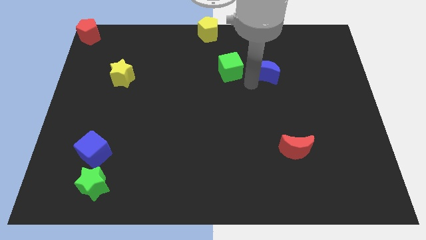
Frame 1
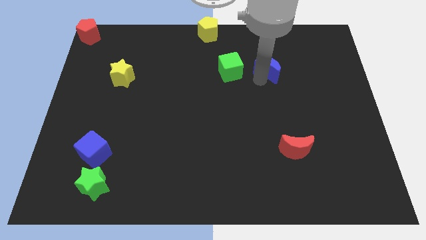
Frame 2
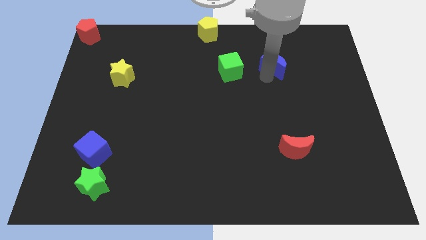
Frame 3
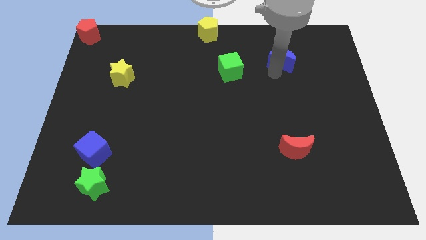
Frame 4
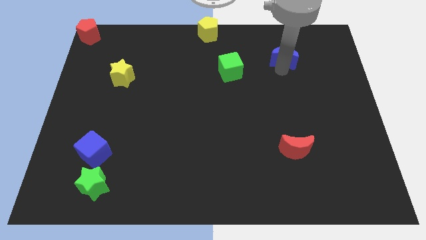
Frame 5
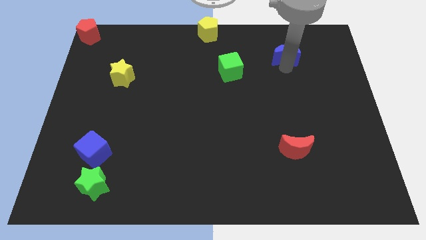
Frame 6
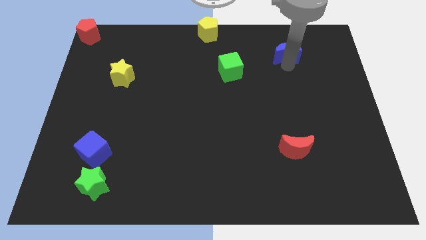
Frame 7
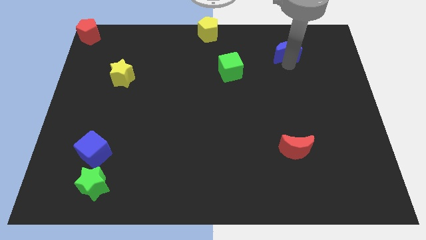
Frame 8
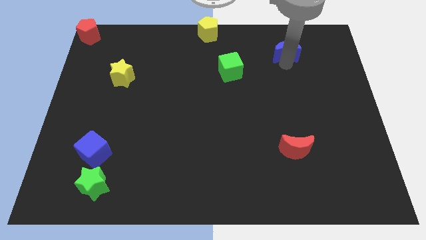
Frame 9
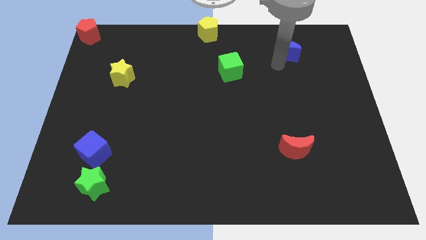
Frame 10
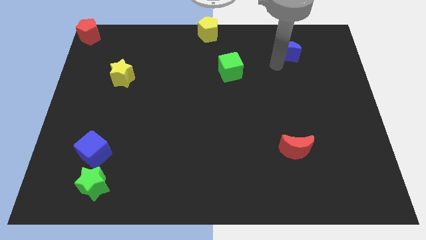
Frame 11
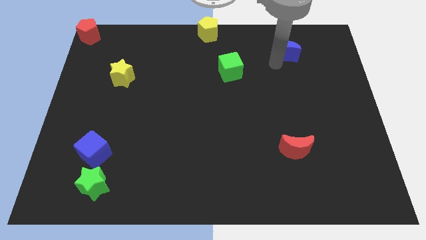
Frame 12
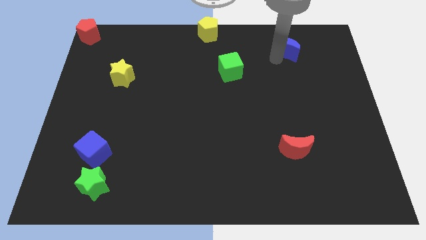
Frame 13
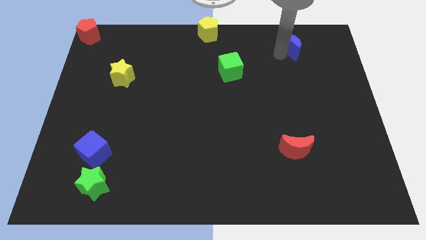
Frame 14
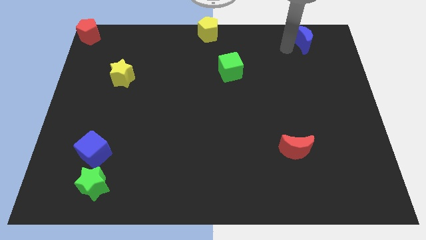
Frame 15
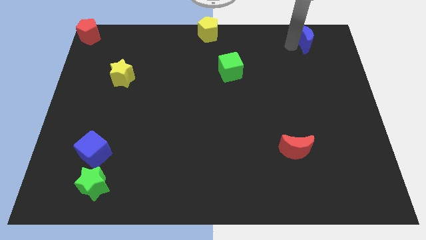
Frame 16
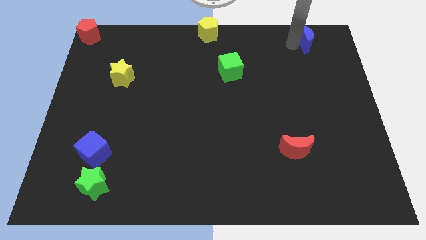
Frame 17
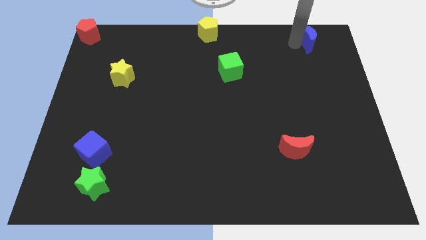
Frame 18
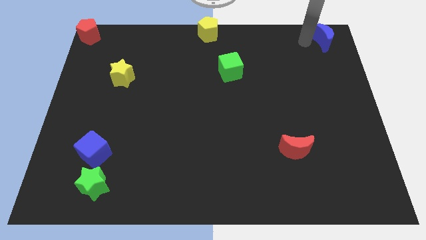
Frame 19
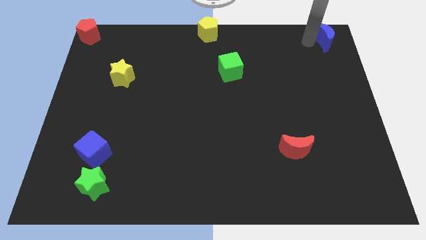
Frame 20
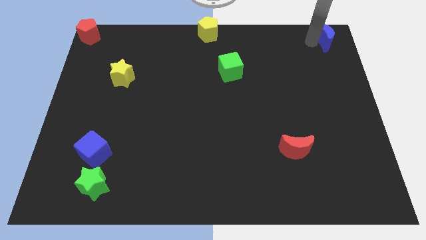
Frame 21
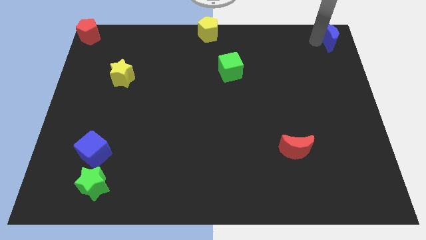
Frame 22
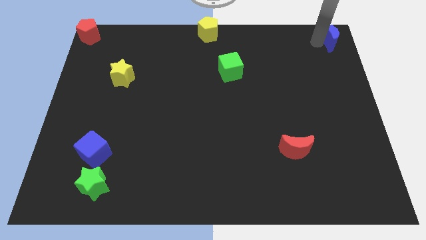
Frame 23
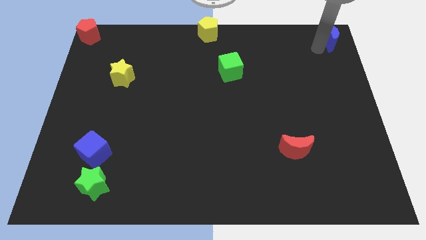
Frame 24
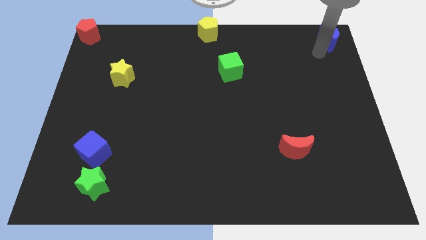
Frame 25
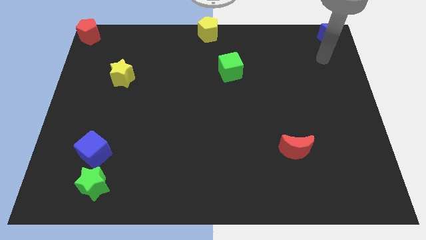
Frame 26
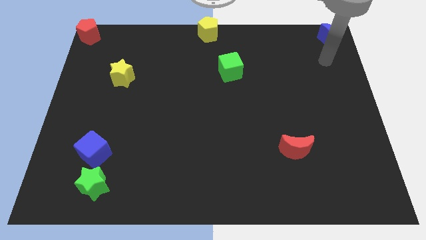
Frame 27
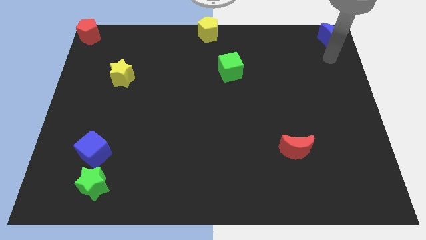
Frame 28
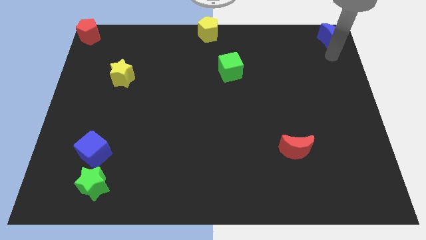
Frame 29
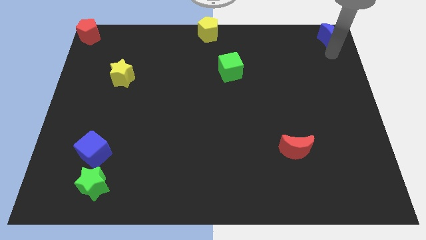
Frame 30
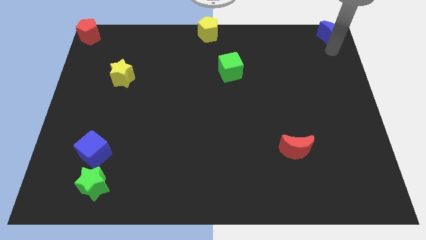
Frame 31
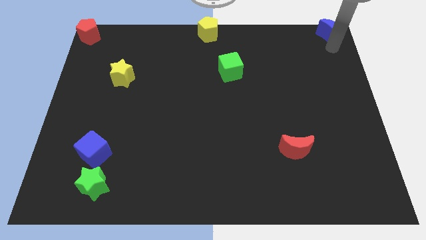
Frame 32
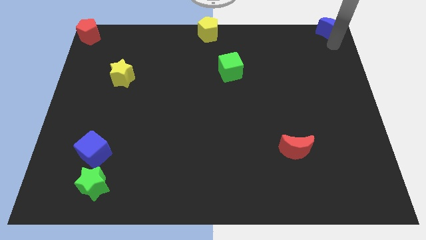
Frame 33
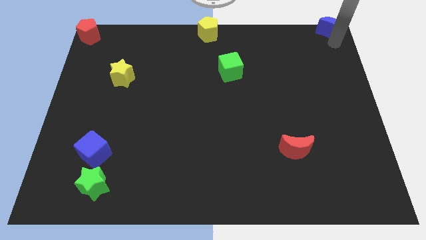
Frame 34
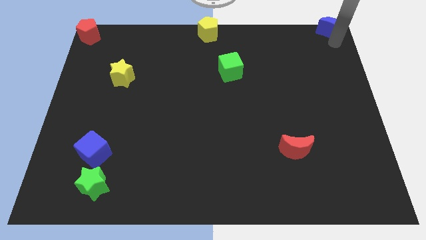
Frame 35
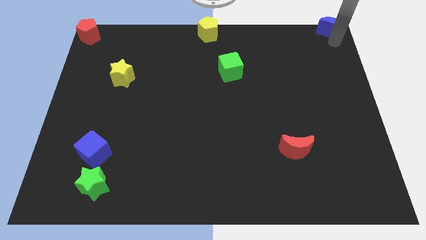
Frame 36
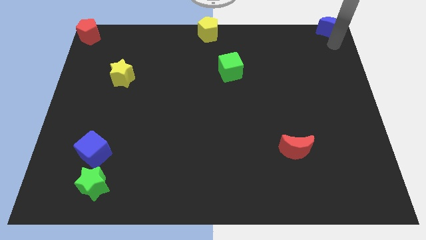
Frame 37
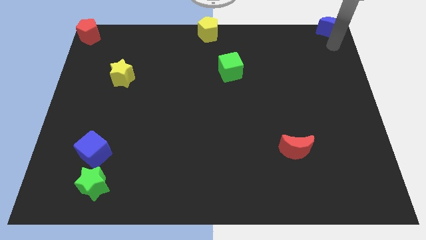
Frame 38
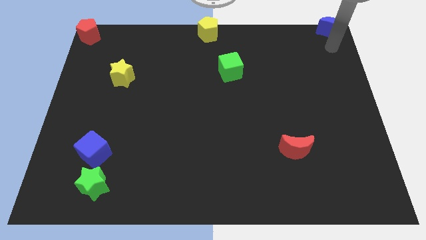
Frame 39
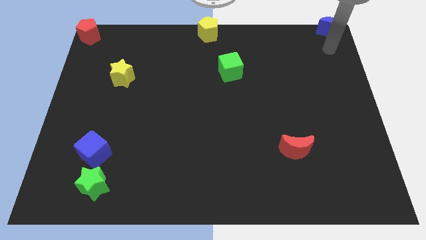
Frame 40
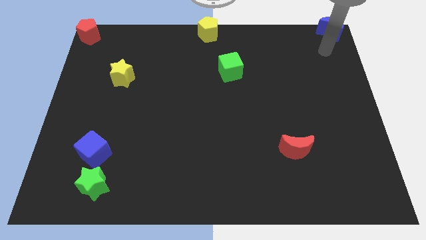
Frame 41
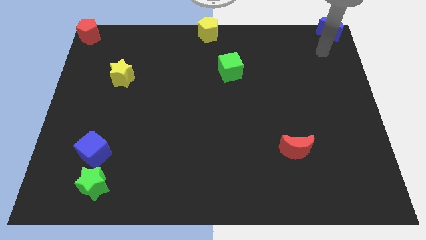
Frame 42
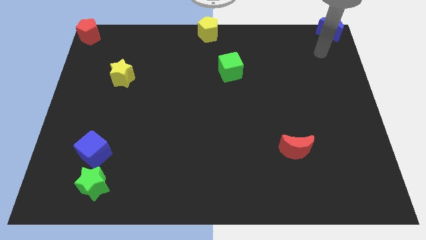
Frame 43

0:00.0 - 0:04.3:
put the blue moon to the top right corner of the board

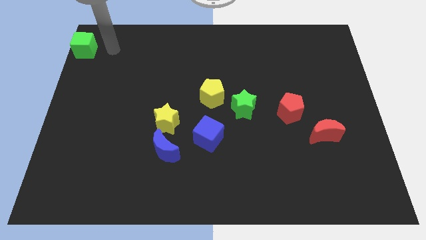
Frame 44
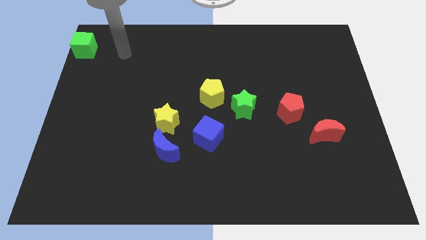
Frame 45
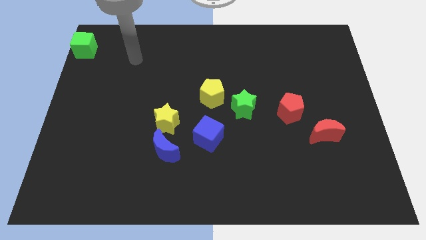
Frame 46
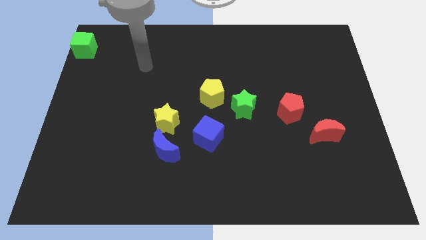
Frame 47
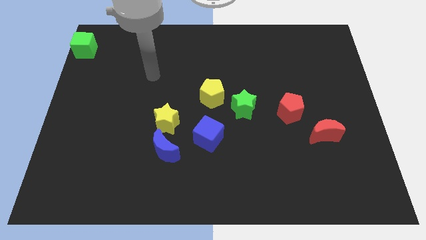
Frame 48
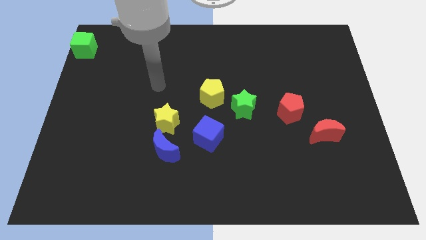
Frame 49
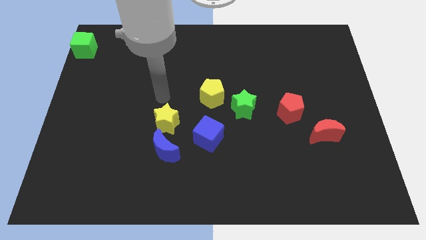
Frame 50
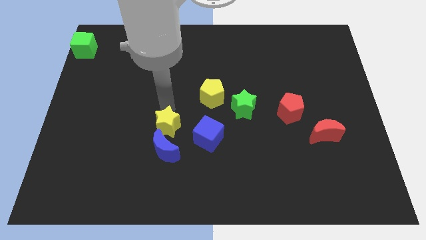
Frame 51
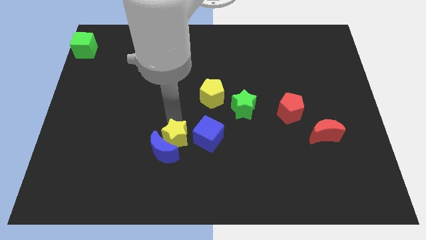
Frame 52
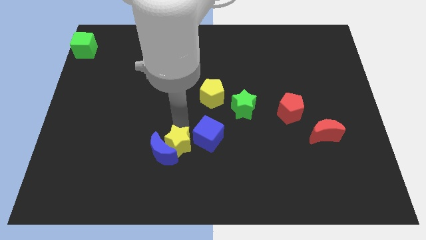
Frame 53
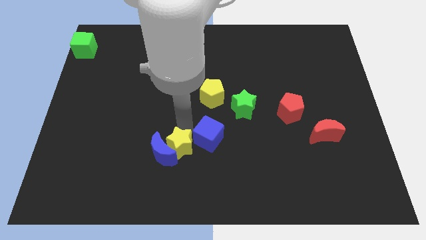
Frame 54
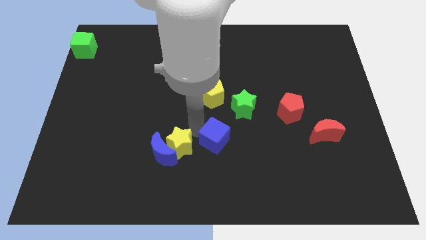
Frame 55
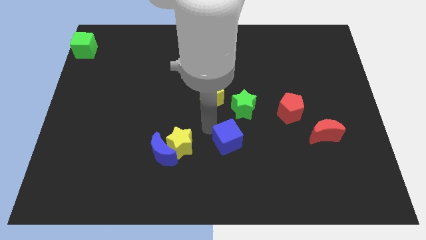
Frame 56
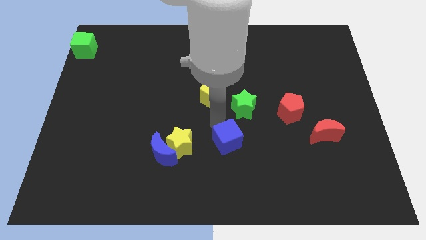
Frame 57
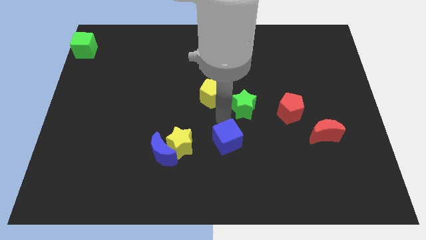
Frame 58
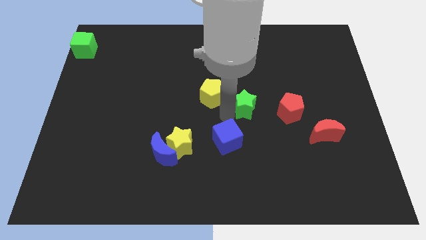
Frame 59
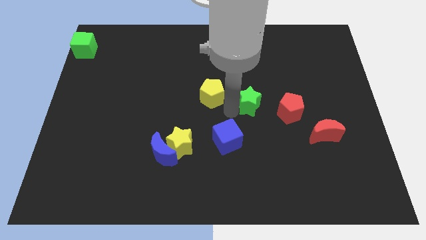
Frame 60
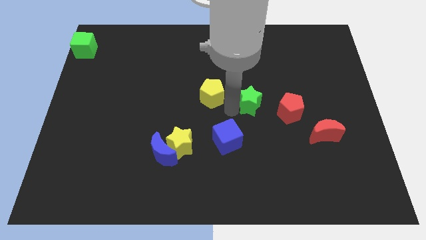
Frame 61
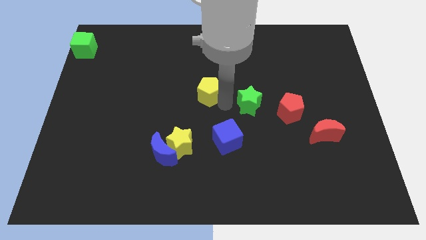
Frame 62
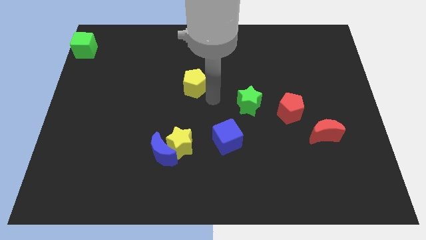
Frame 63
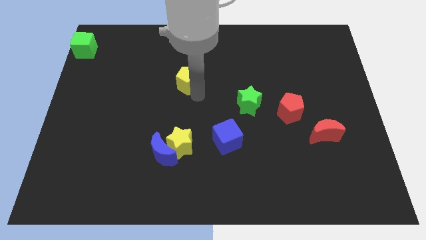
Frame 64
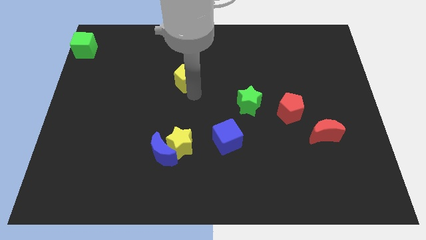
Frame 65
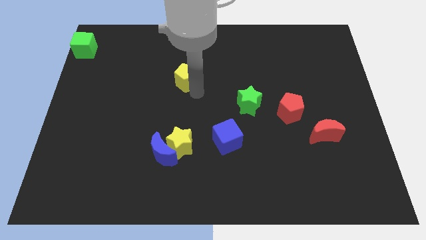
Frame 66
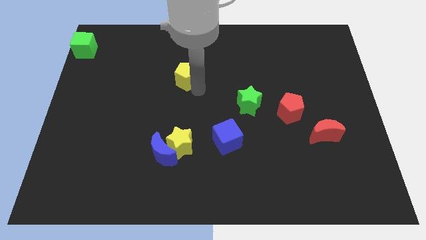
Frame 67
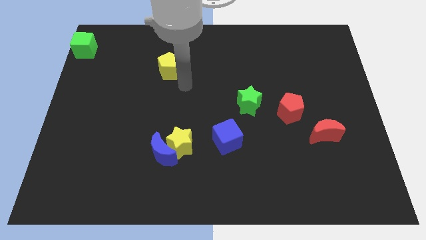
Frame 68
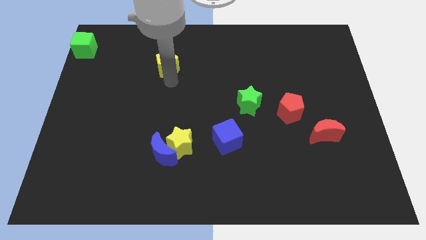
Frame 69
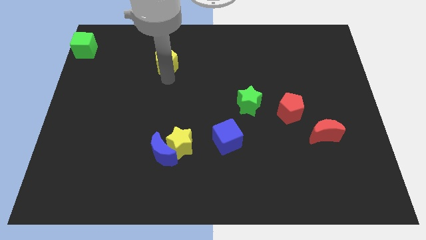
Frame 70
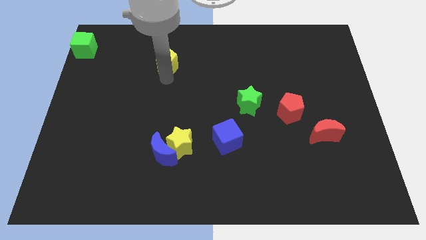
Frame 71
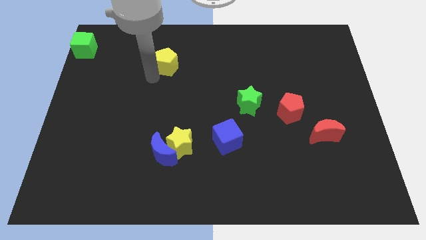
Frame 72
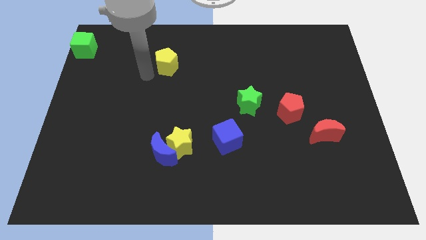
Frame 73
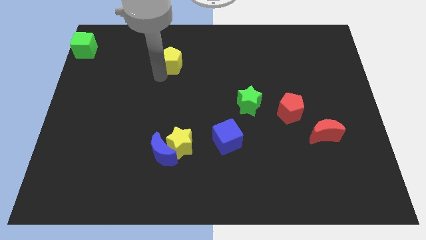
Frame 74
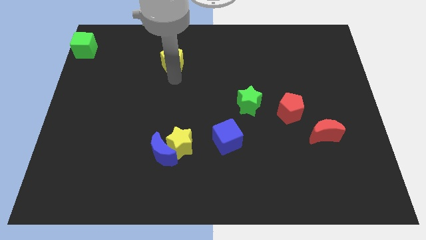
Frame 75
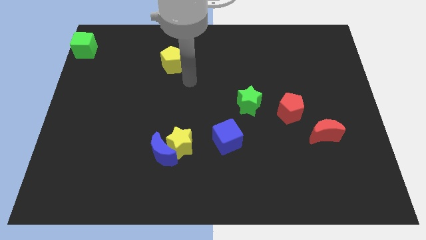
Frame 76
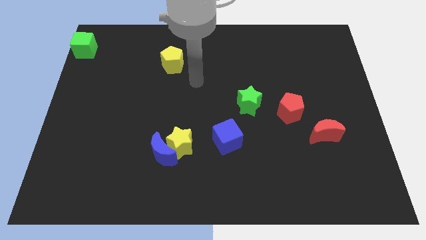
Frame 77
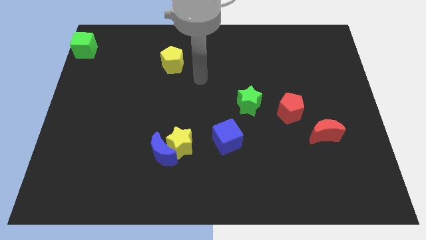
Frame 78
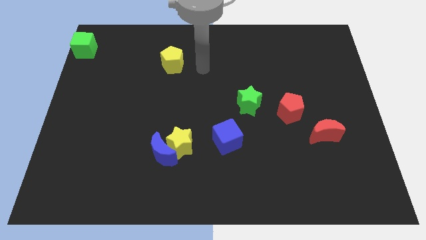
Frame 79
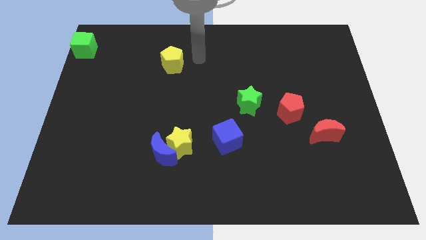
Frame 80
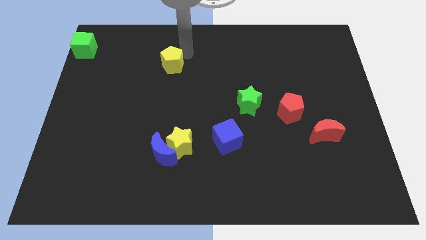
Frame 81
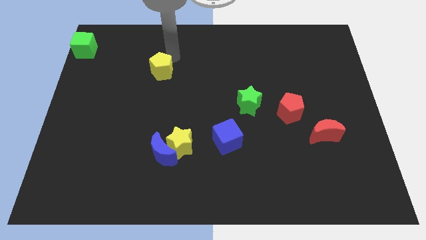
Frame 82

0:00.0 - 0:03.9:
push the yellow pentagon towards top

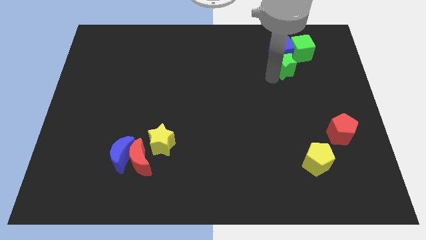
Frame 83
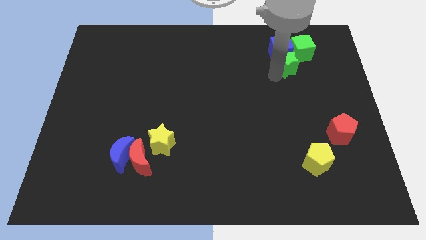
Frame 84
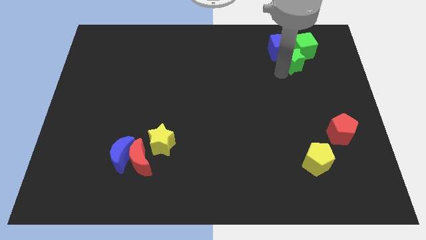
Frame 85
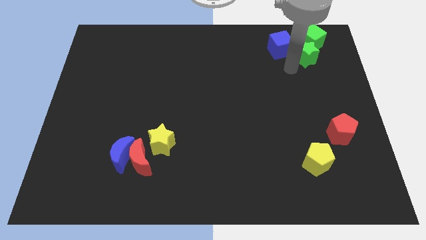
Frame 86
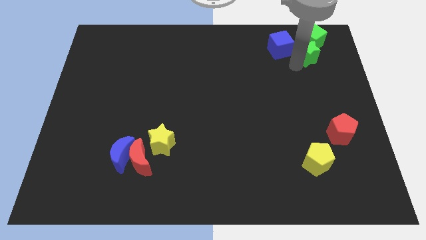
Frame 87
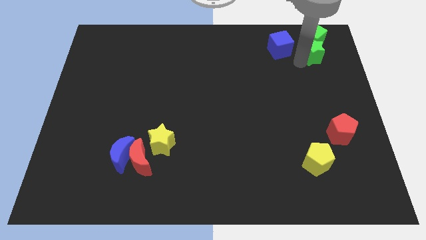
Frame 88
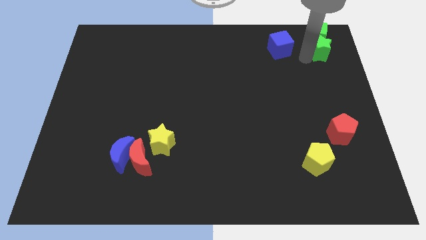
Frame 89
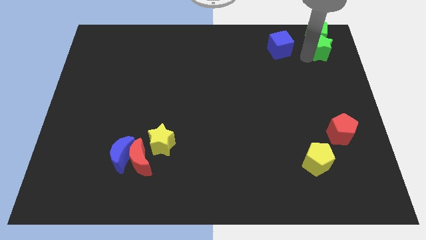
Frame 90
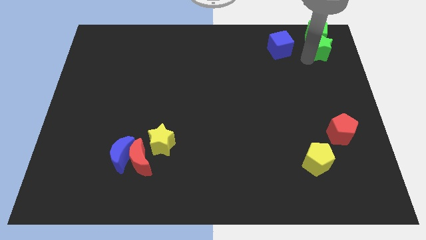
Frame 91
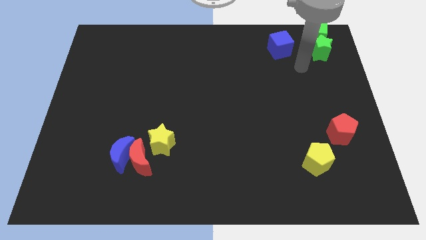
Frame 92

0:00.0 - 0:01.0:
push the green cube and green star towards the top right of the board
